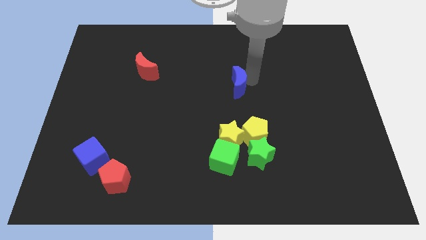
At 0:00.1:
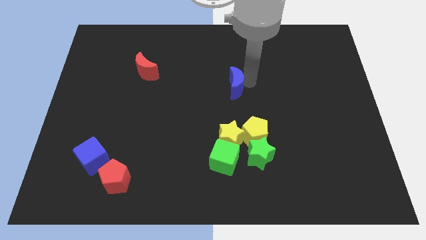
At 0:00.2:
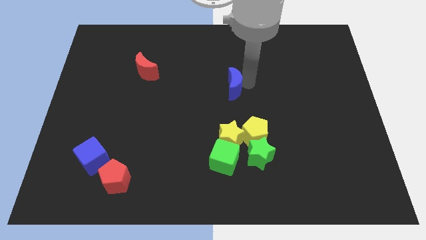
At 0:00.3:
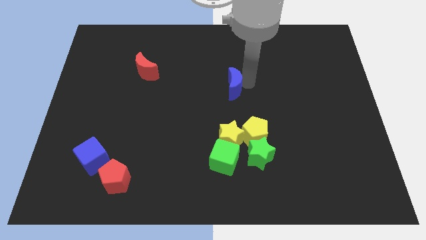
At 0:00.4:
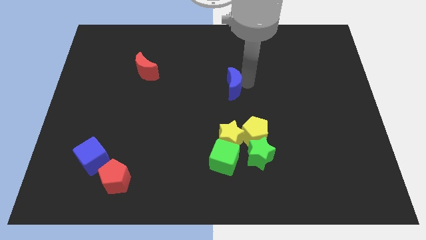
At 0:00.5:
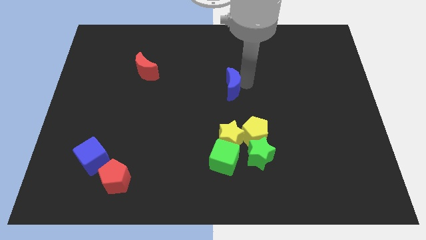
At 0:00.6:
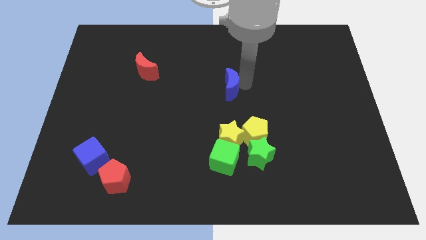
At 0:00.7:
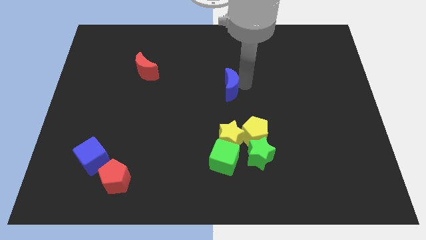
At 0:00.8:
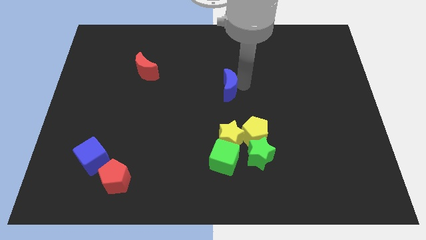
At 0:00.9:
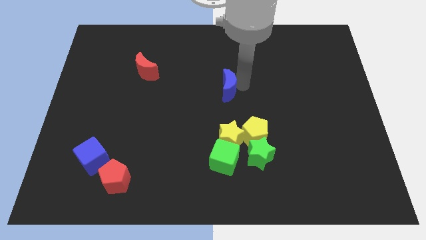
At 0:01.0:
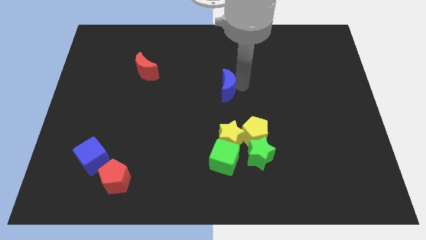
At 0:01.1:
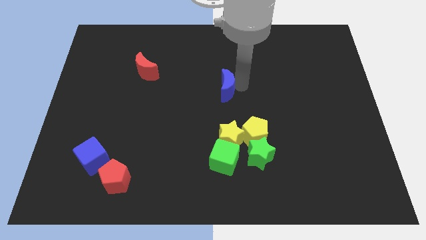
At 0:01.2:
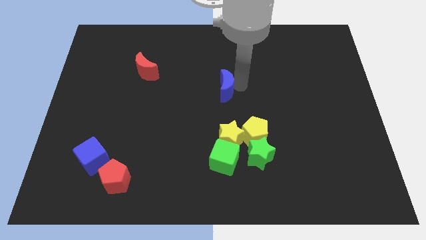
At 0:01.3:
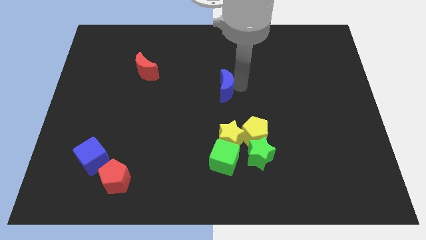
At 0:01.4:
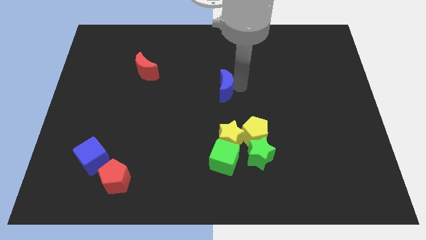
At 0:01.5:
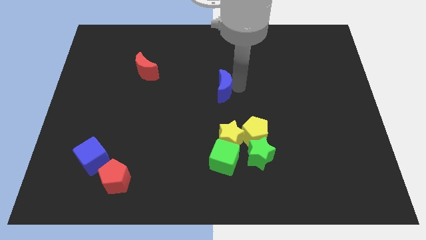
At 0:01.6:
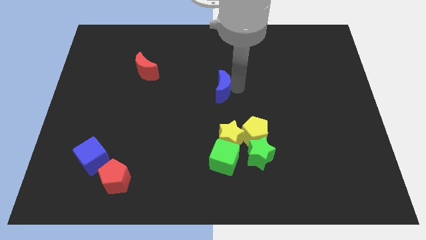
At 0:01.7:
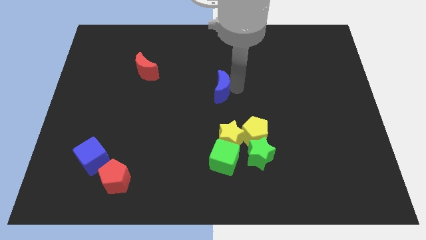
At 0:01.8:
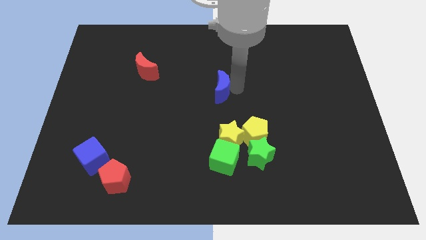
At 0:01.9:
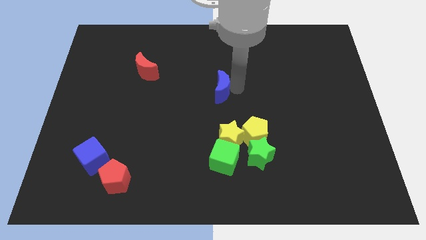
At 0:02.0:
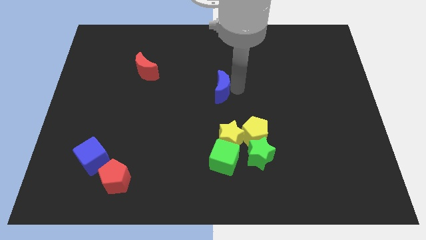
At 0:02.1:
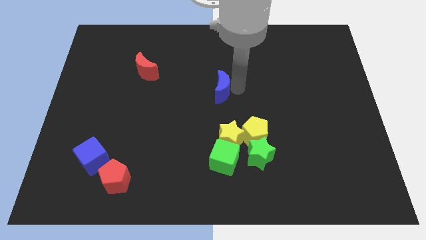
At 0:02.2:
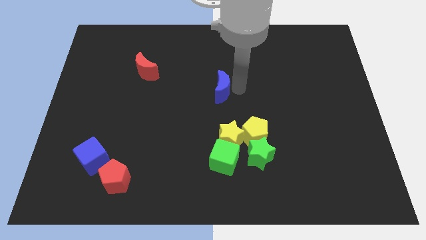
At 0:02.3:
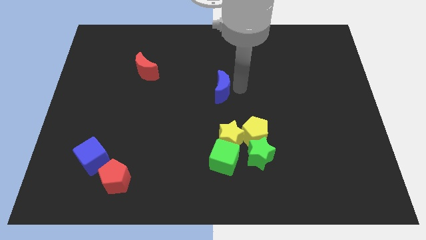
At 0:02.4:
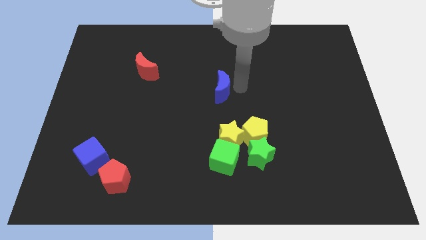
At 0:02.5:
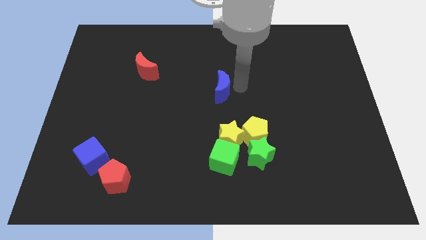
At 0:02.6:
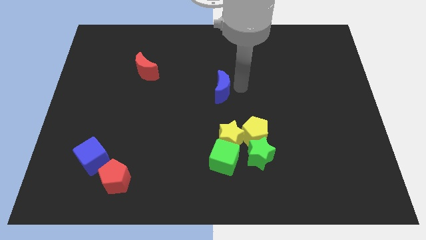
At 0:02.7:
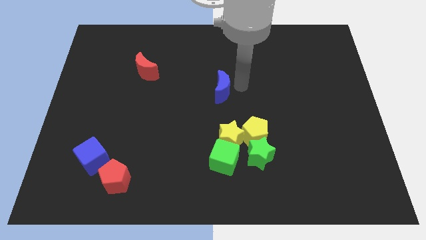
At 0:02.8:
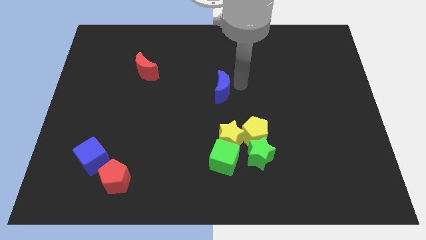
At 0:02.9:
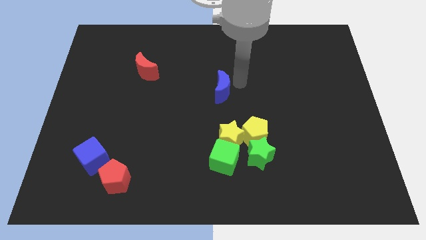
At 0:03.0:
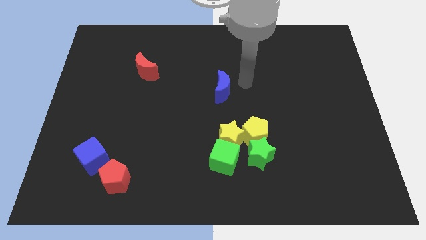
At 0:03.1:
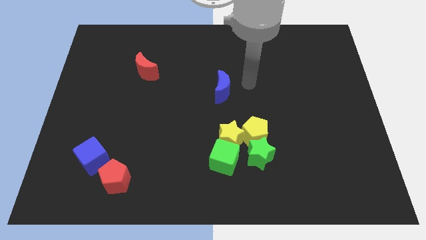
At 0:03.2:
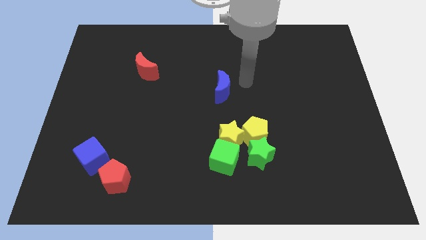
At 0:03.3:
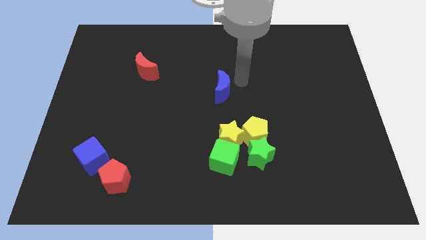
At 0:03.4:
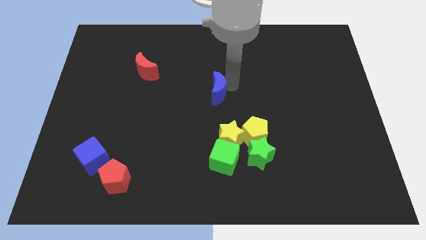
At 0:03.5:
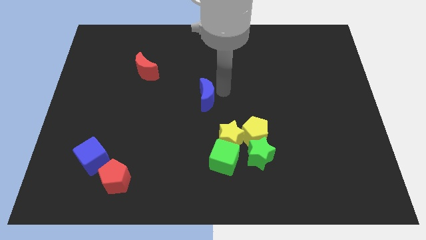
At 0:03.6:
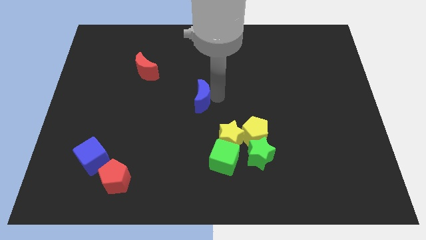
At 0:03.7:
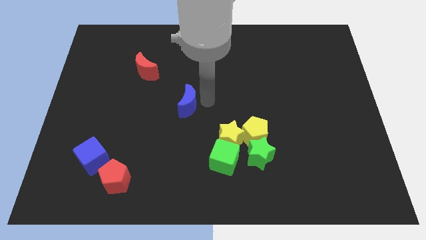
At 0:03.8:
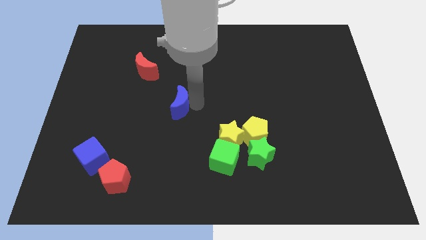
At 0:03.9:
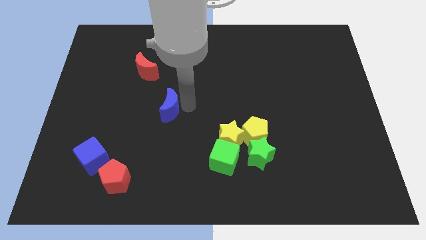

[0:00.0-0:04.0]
place the blue crescent in between the red crescent and the green cube

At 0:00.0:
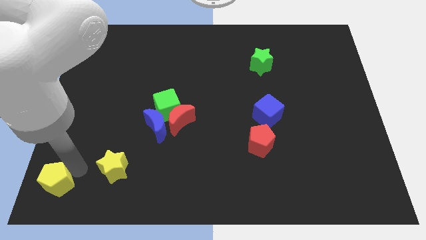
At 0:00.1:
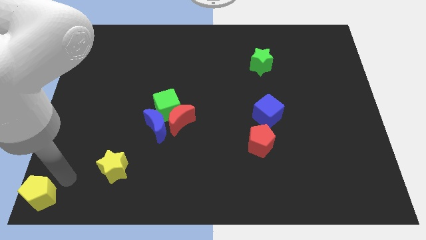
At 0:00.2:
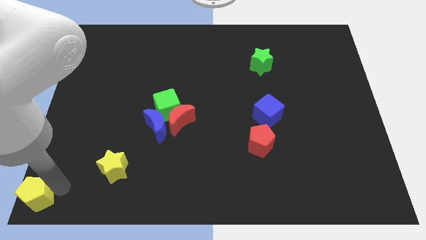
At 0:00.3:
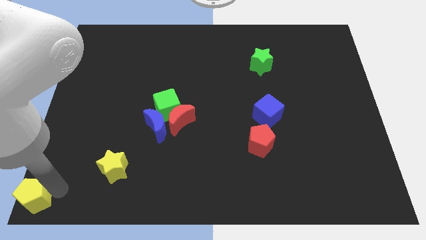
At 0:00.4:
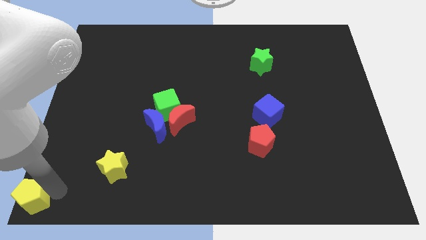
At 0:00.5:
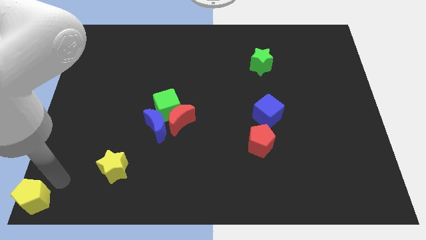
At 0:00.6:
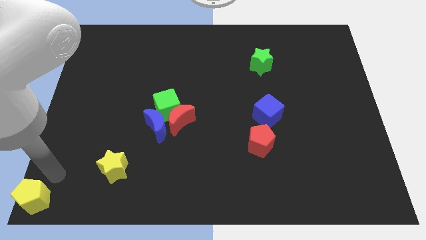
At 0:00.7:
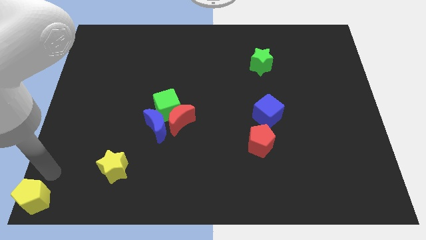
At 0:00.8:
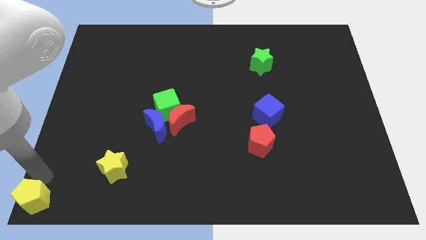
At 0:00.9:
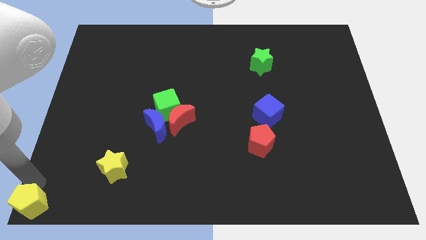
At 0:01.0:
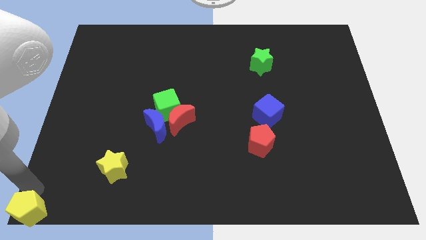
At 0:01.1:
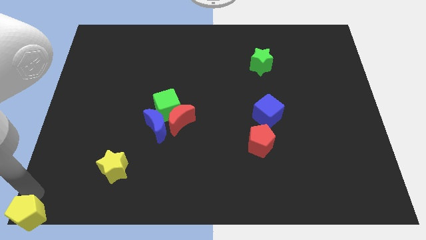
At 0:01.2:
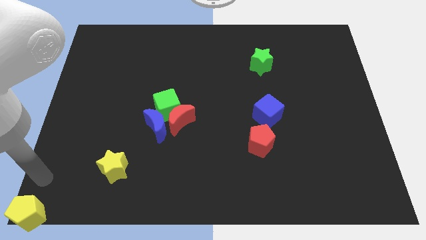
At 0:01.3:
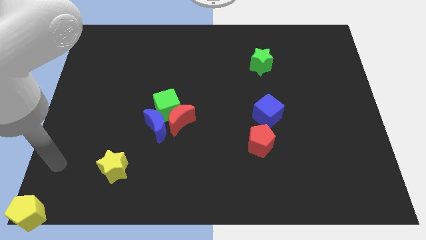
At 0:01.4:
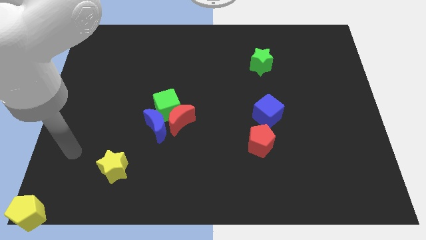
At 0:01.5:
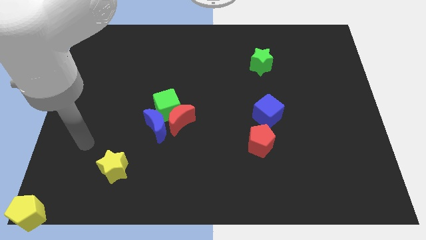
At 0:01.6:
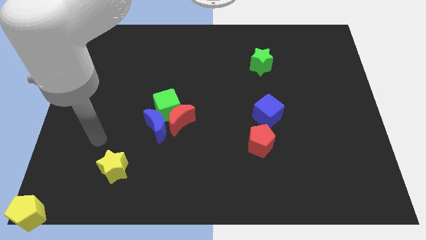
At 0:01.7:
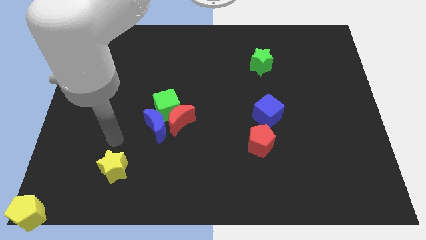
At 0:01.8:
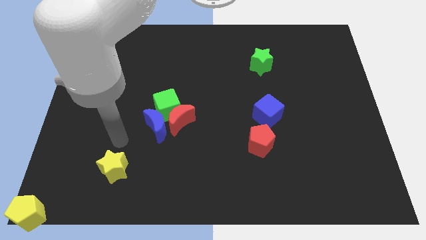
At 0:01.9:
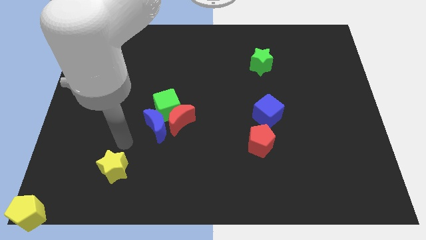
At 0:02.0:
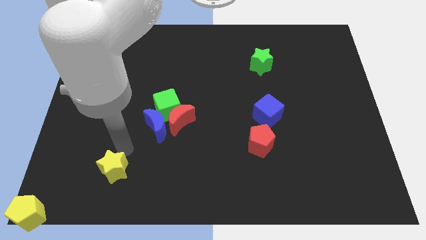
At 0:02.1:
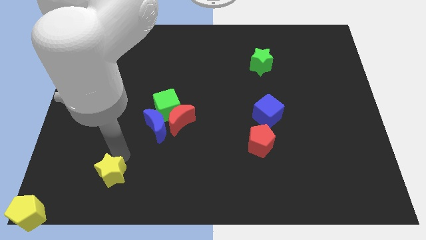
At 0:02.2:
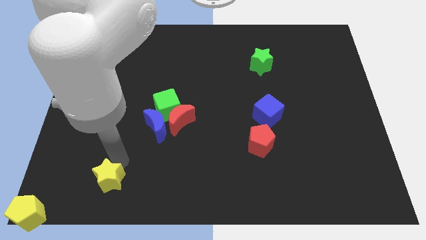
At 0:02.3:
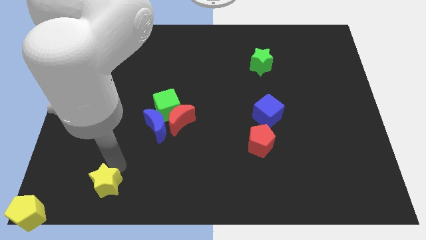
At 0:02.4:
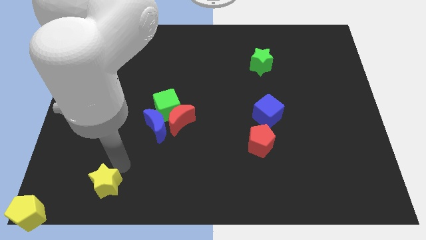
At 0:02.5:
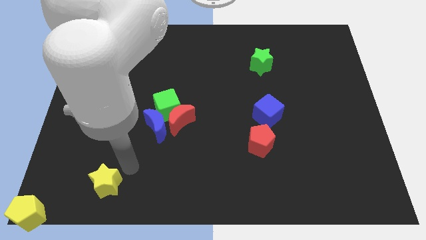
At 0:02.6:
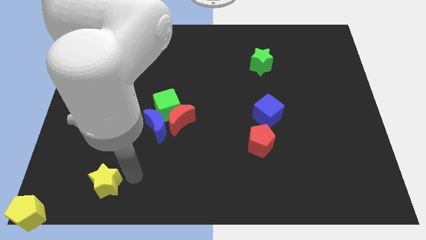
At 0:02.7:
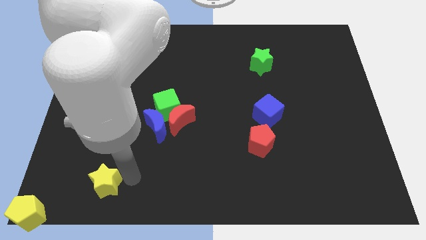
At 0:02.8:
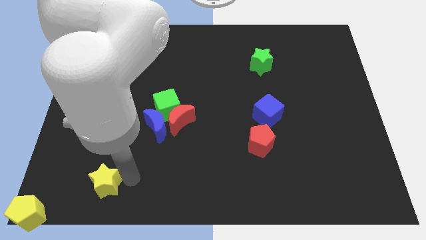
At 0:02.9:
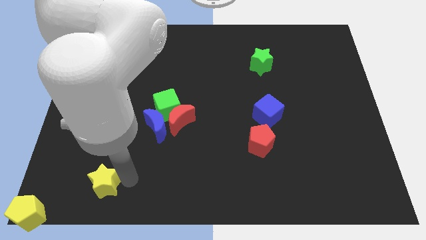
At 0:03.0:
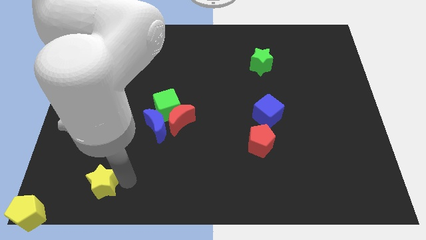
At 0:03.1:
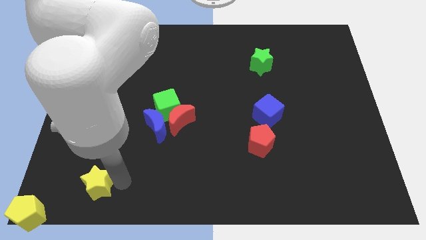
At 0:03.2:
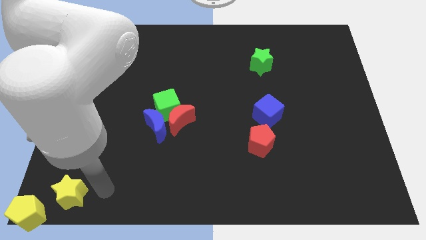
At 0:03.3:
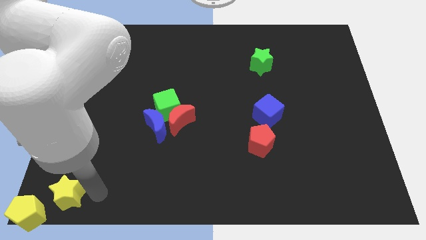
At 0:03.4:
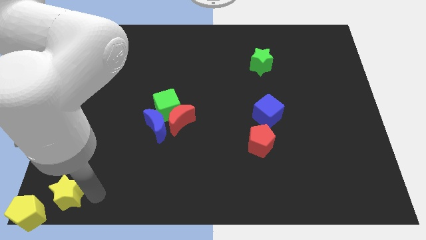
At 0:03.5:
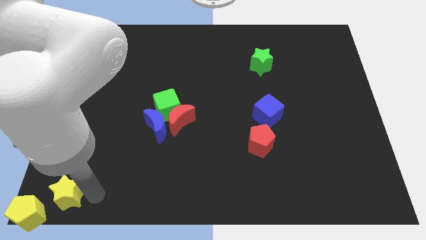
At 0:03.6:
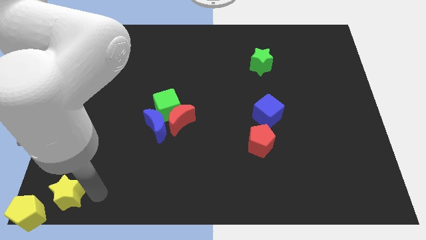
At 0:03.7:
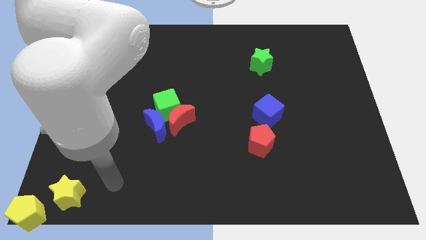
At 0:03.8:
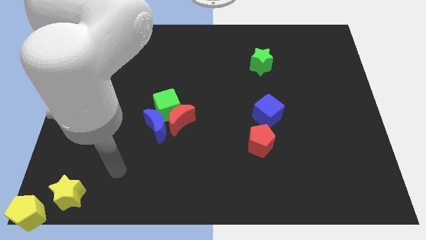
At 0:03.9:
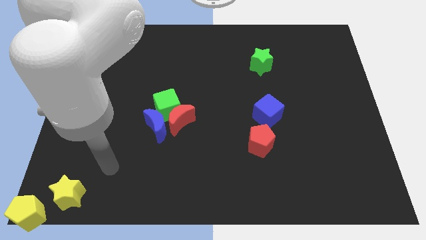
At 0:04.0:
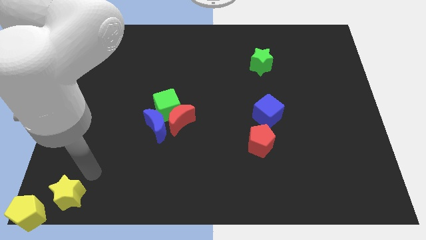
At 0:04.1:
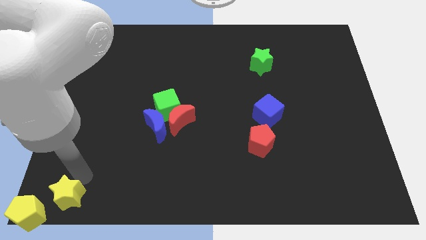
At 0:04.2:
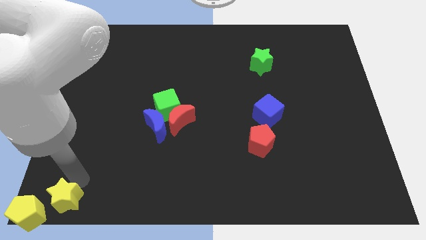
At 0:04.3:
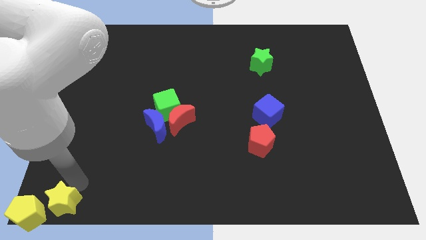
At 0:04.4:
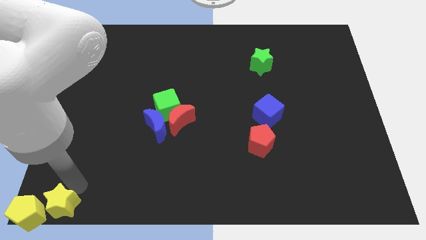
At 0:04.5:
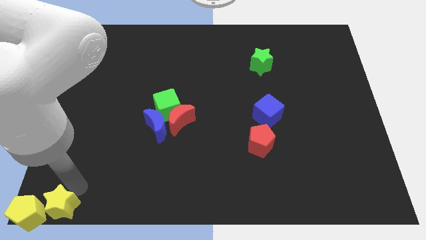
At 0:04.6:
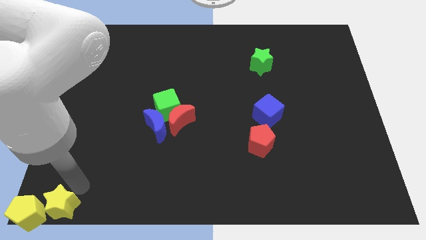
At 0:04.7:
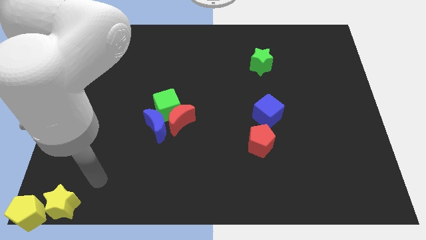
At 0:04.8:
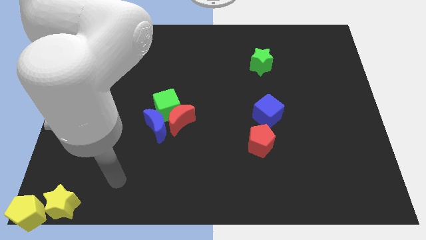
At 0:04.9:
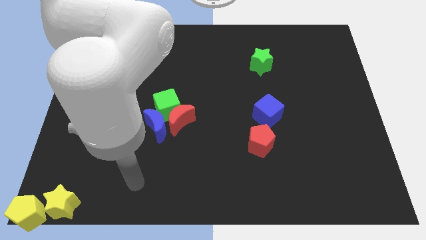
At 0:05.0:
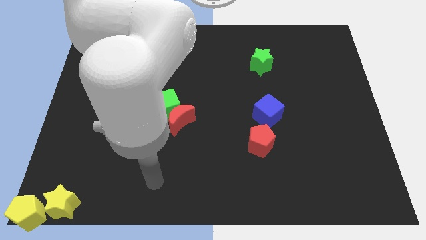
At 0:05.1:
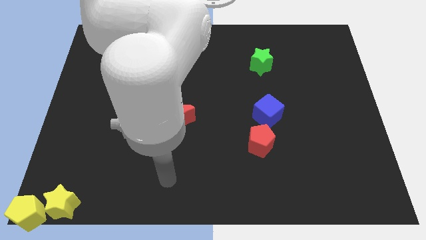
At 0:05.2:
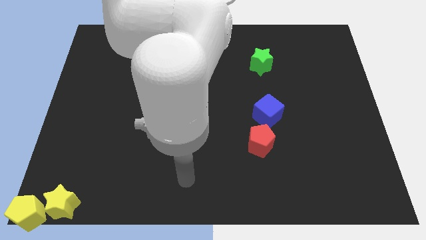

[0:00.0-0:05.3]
slide the yellow blocks to bottom left corner of the board
